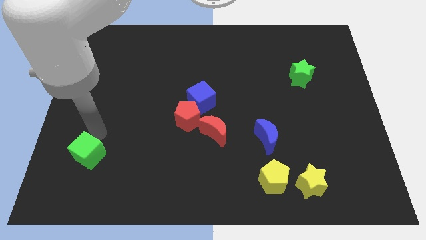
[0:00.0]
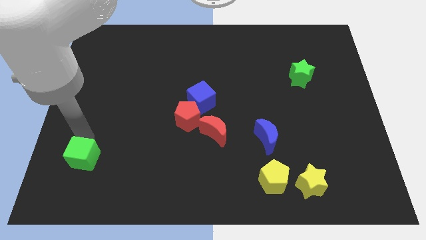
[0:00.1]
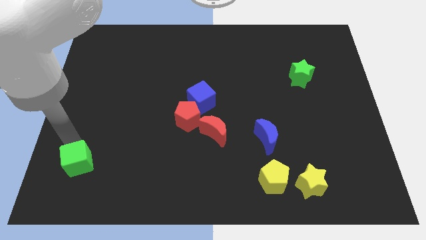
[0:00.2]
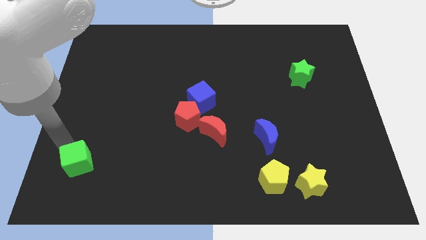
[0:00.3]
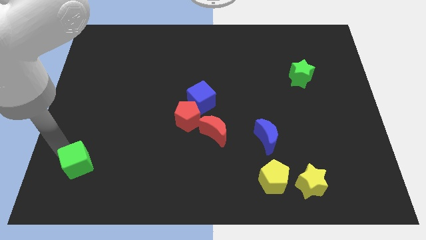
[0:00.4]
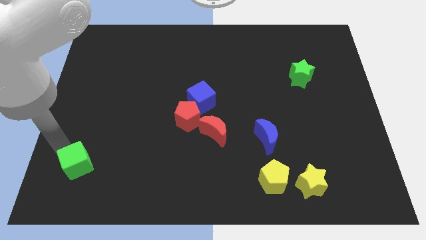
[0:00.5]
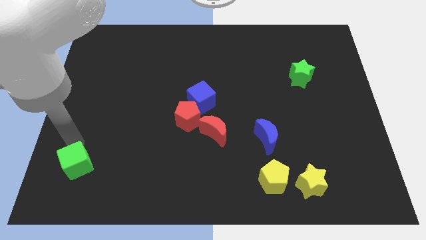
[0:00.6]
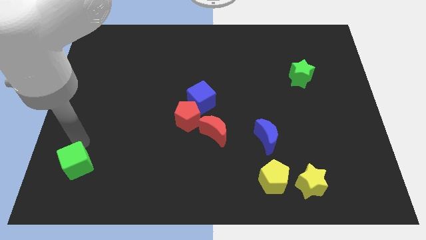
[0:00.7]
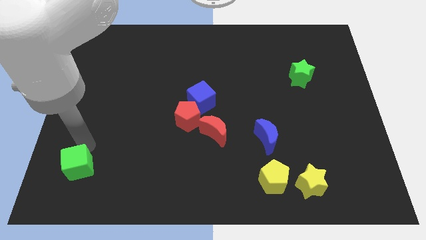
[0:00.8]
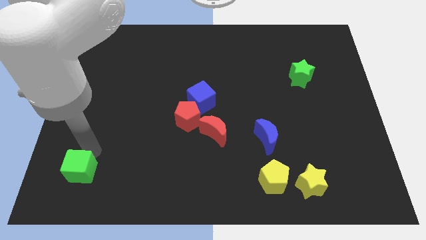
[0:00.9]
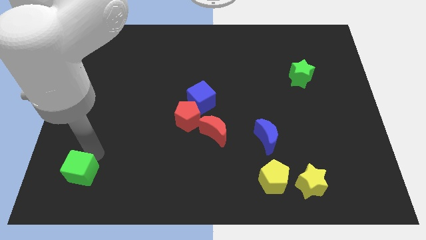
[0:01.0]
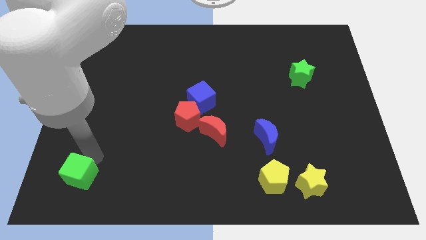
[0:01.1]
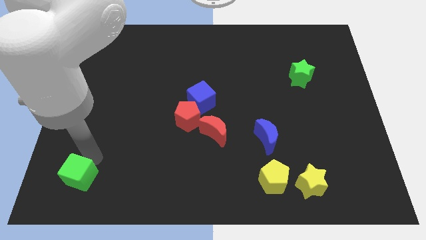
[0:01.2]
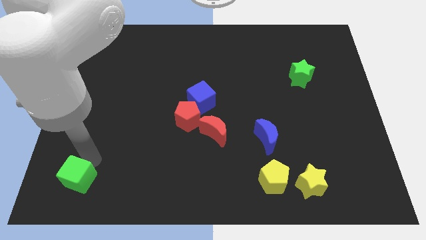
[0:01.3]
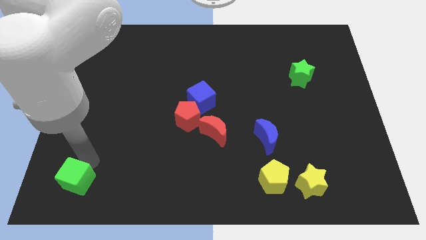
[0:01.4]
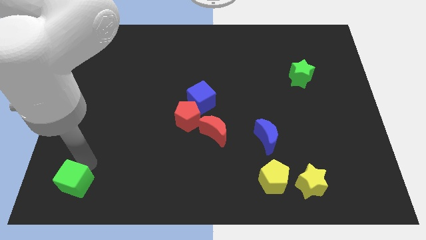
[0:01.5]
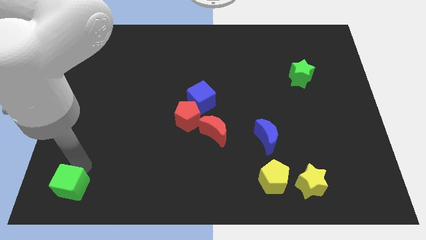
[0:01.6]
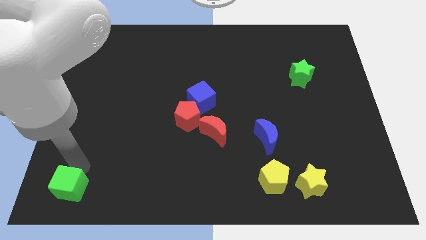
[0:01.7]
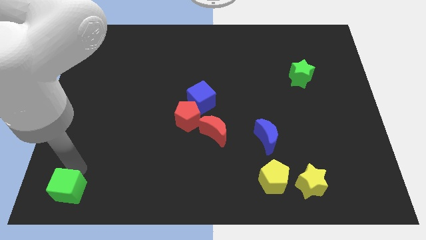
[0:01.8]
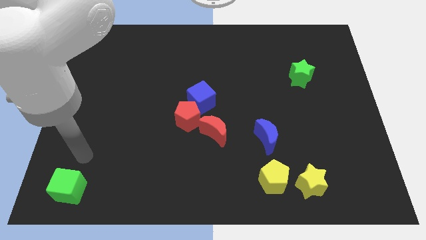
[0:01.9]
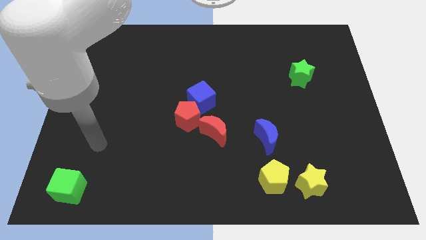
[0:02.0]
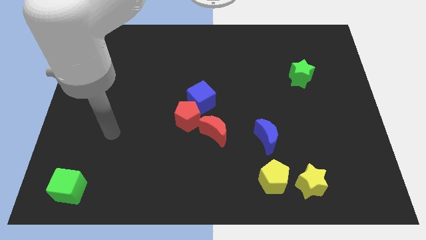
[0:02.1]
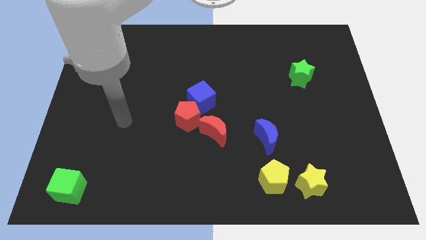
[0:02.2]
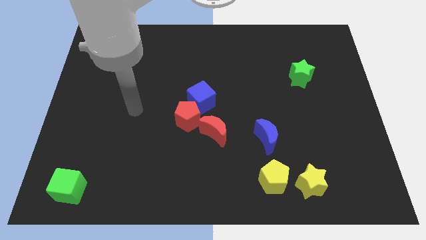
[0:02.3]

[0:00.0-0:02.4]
place the green cube at the bottom left corner of the board

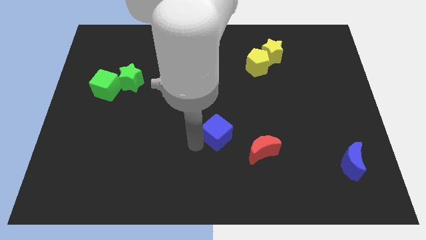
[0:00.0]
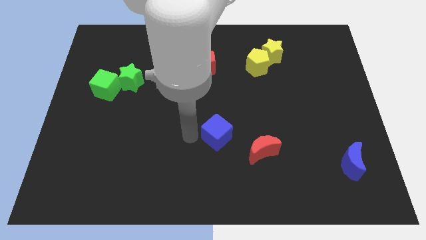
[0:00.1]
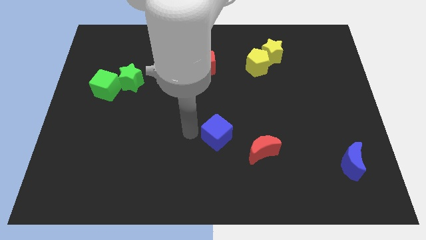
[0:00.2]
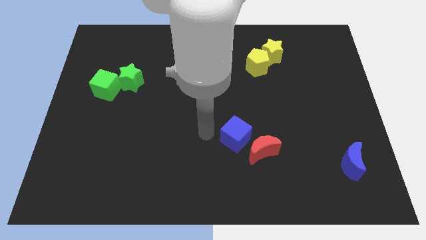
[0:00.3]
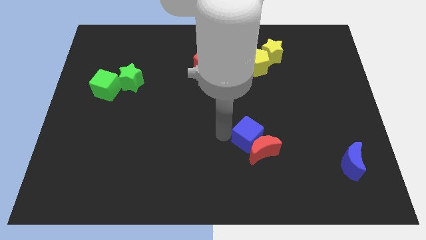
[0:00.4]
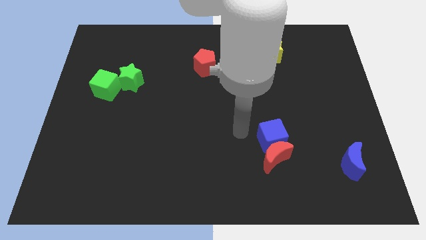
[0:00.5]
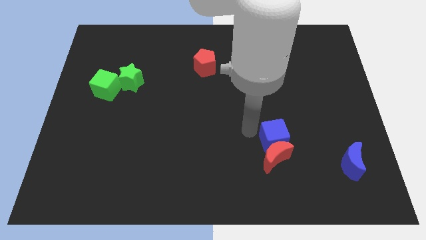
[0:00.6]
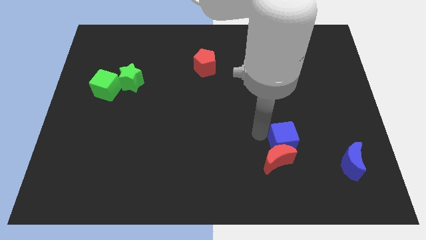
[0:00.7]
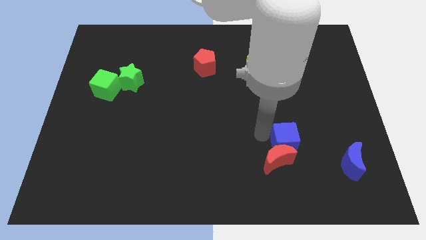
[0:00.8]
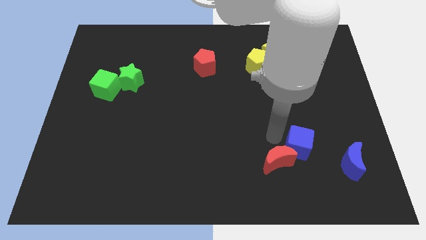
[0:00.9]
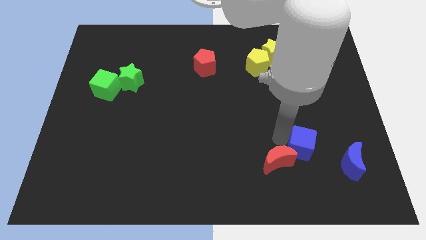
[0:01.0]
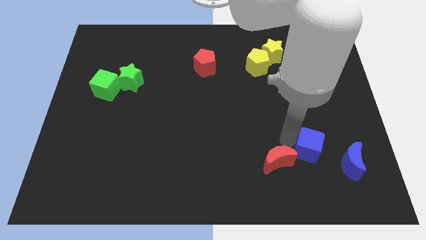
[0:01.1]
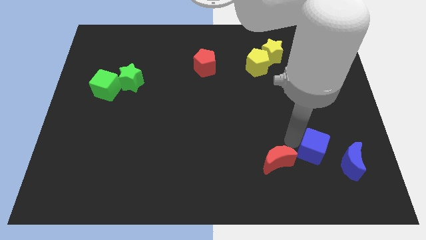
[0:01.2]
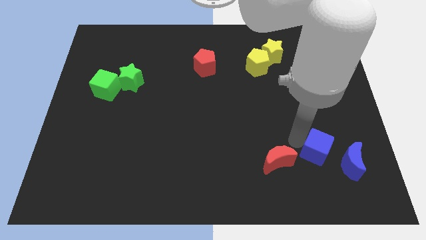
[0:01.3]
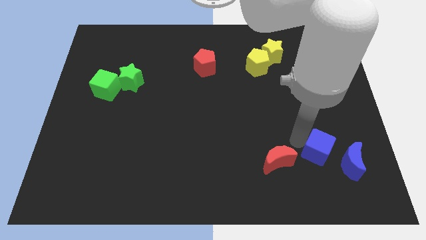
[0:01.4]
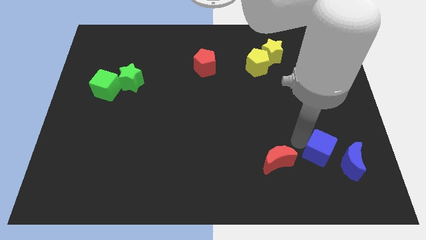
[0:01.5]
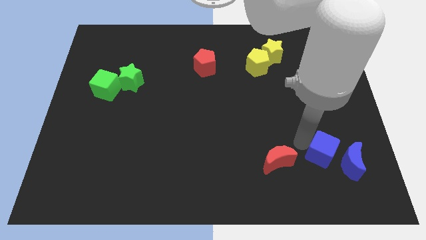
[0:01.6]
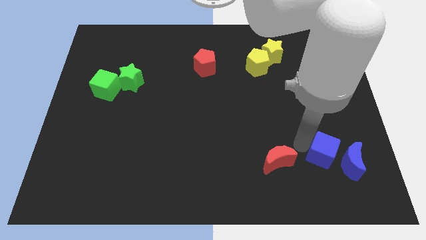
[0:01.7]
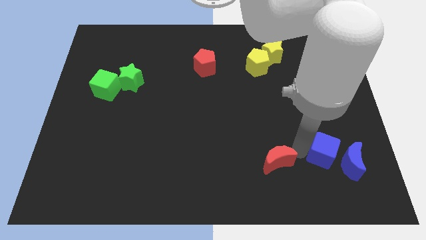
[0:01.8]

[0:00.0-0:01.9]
move blue cube towards blue moon

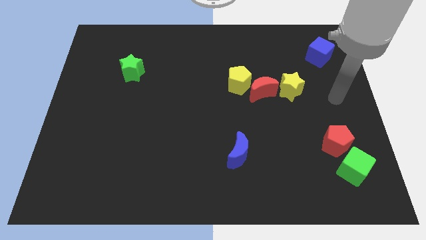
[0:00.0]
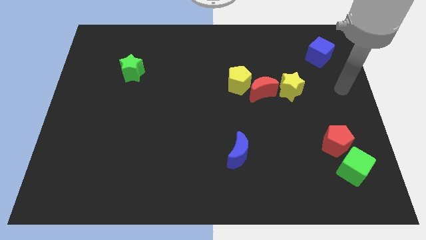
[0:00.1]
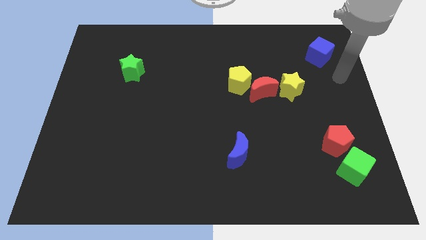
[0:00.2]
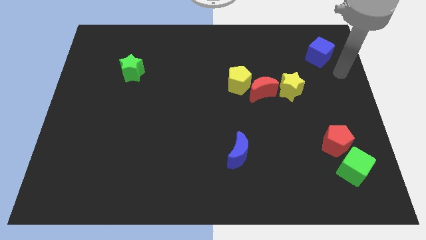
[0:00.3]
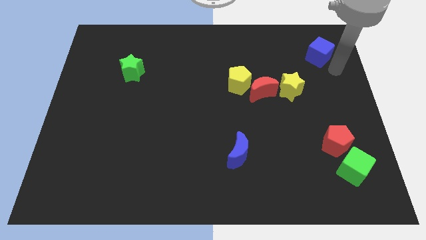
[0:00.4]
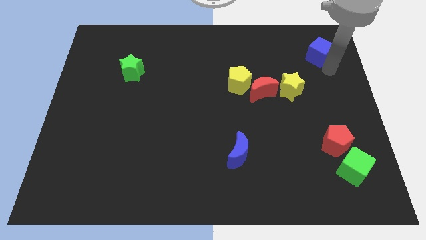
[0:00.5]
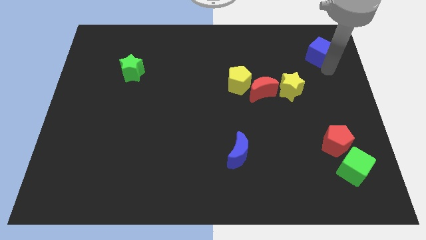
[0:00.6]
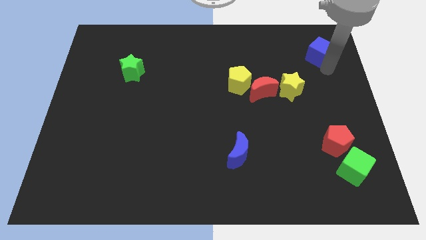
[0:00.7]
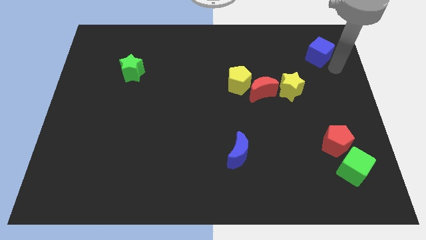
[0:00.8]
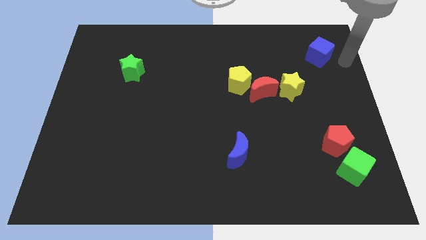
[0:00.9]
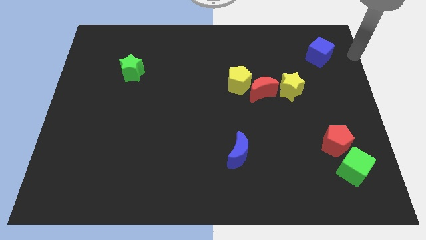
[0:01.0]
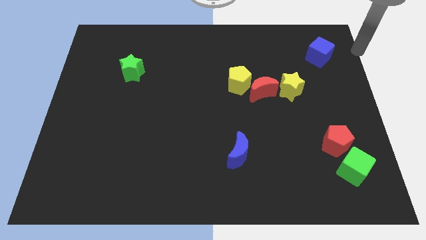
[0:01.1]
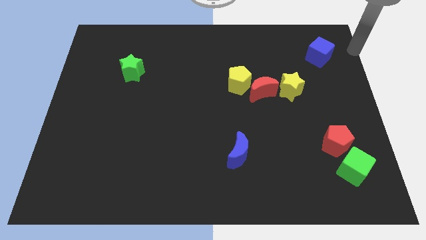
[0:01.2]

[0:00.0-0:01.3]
point your arm at the right of the blue cube

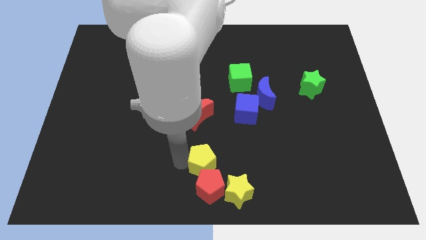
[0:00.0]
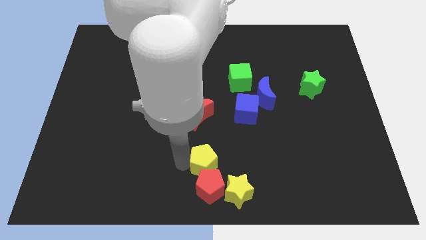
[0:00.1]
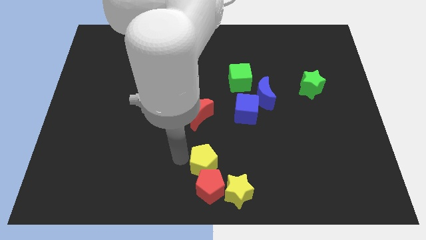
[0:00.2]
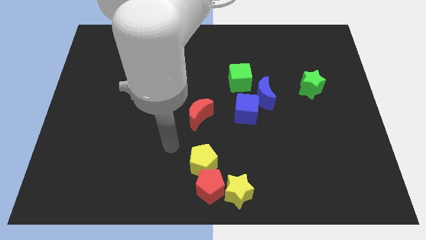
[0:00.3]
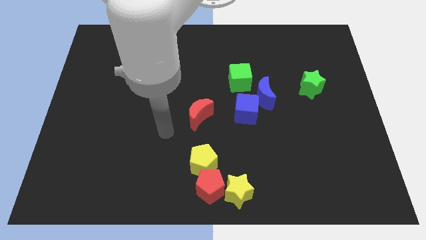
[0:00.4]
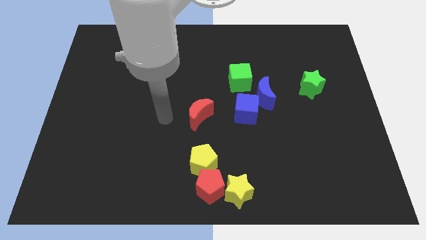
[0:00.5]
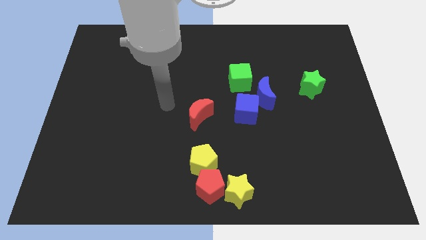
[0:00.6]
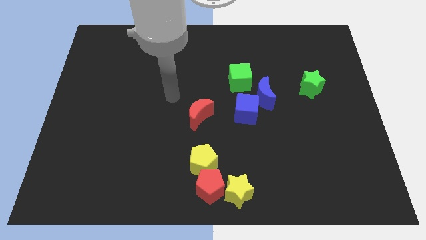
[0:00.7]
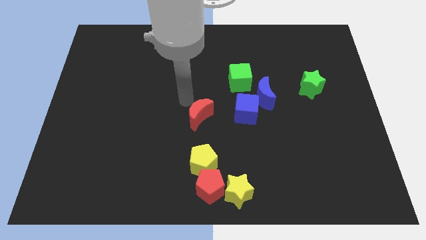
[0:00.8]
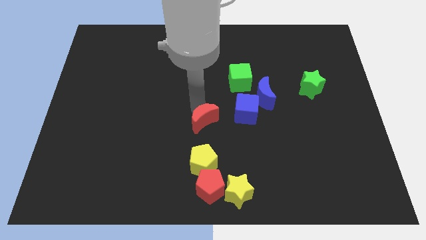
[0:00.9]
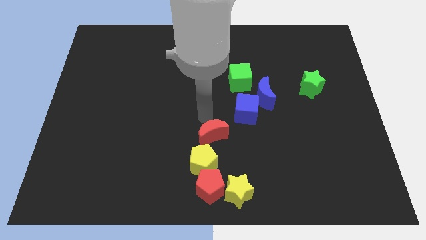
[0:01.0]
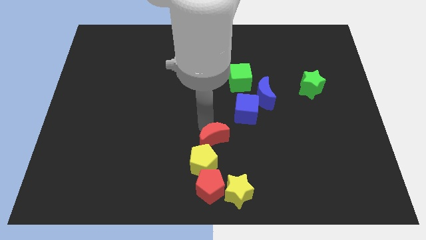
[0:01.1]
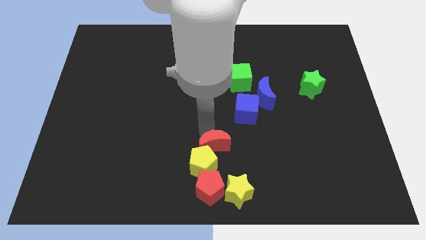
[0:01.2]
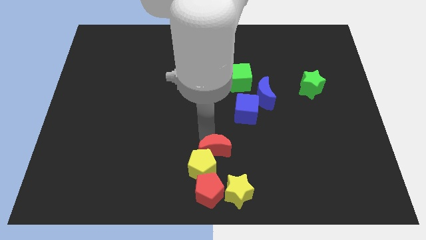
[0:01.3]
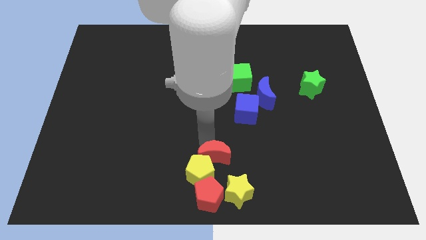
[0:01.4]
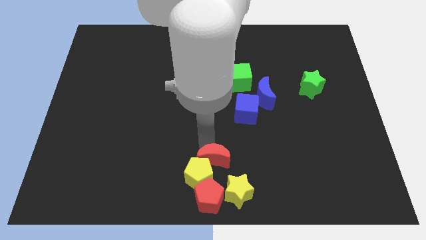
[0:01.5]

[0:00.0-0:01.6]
push the red moon into the yellow pentagon

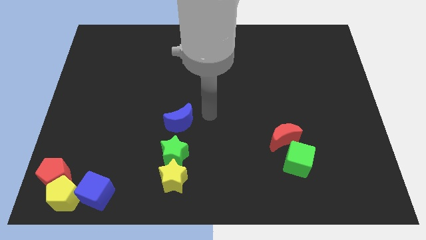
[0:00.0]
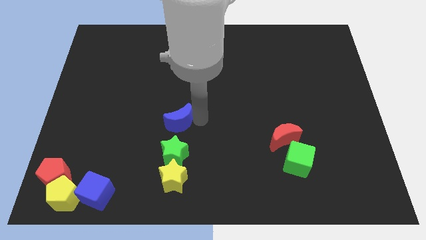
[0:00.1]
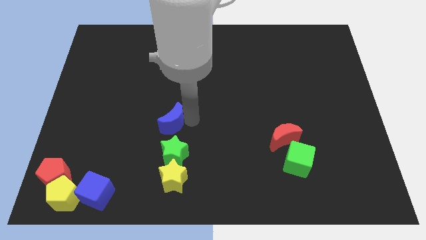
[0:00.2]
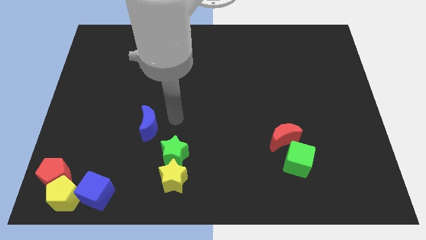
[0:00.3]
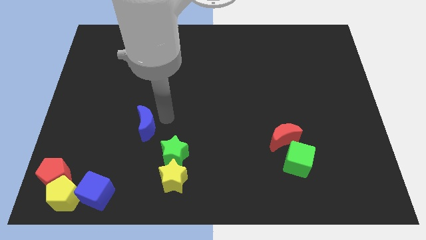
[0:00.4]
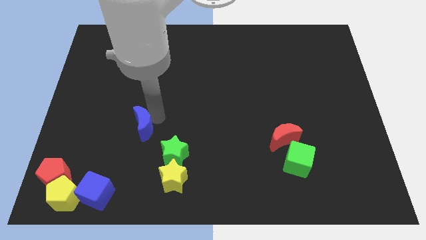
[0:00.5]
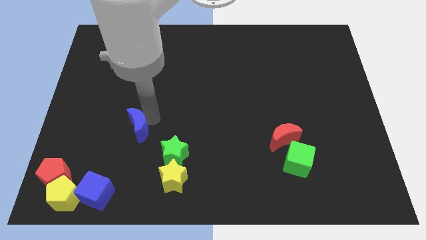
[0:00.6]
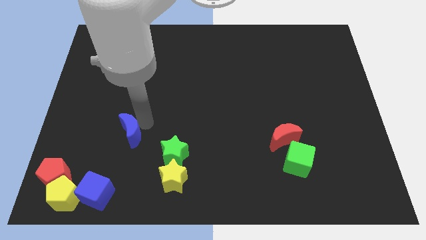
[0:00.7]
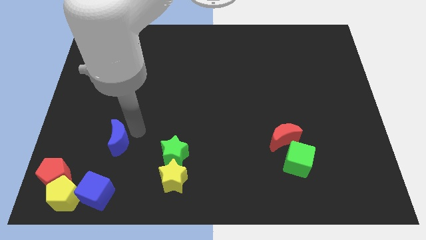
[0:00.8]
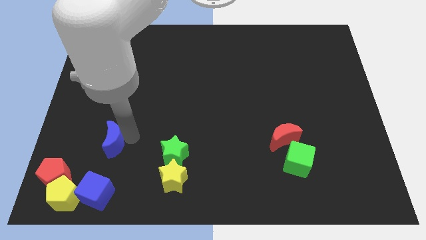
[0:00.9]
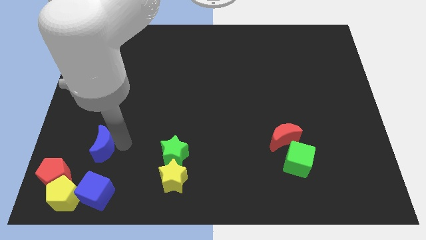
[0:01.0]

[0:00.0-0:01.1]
move blue moon towards red pentagon

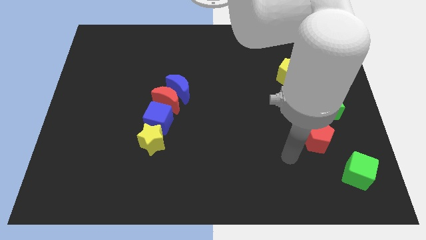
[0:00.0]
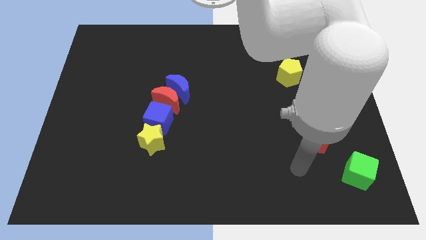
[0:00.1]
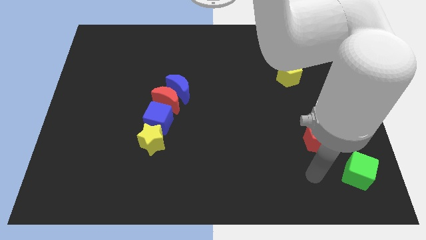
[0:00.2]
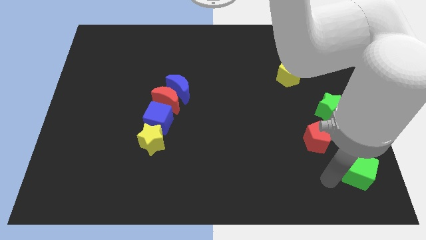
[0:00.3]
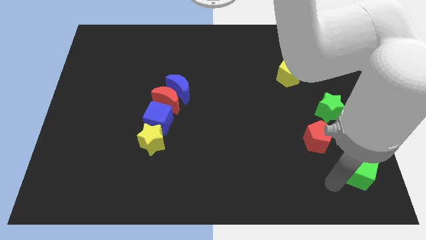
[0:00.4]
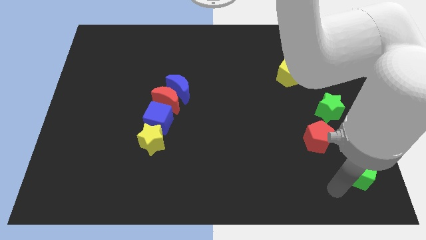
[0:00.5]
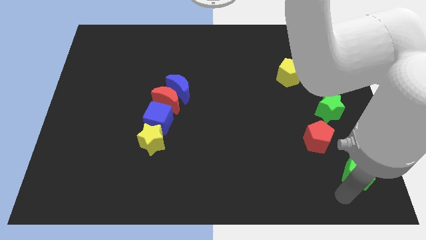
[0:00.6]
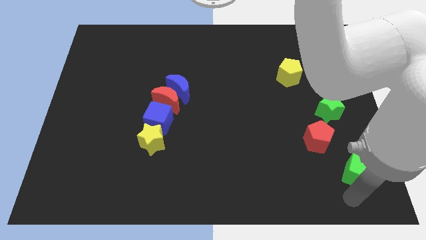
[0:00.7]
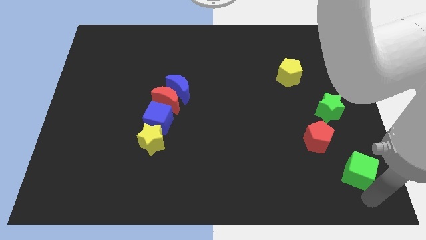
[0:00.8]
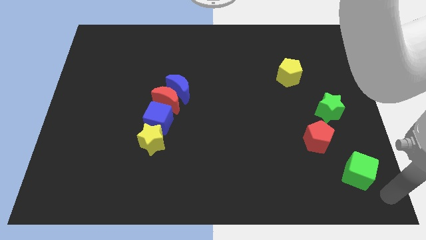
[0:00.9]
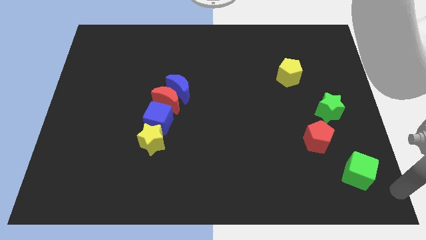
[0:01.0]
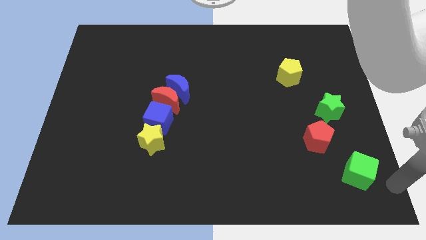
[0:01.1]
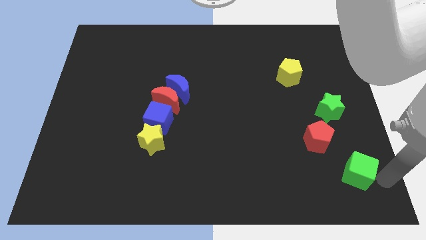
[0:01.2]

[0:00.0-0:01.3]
place your arm at the bottom right of the green cube
